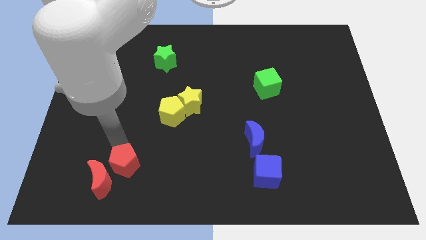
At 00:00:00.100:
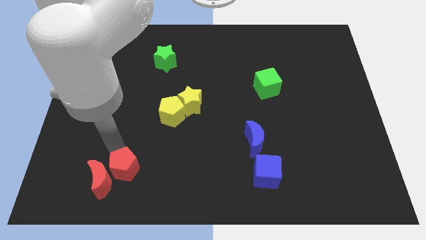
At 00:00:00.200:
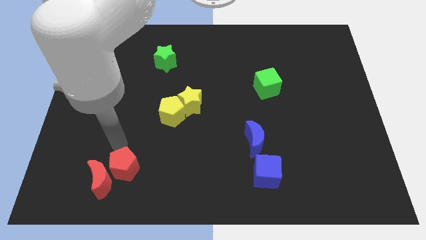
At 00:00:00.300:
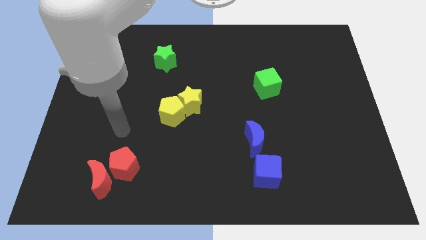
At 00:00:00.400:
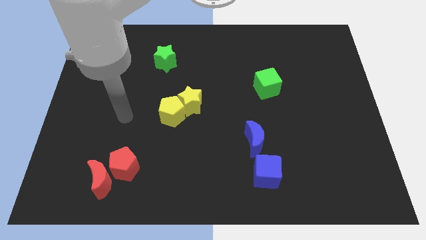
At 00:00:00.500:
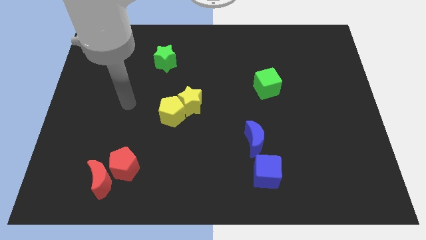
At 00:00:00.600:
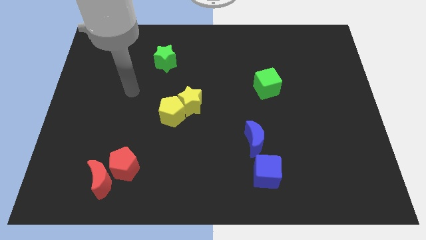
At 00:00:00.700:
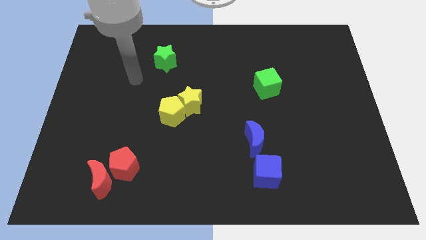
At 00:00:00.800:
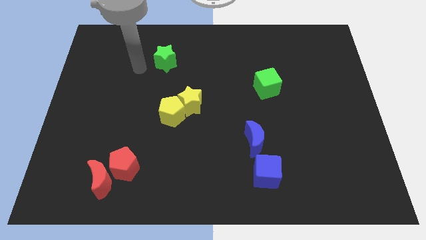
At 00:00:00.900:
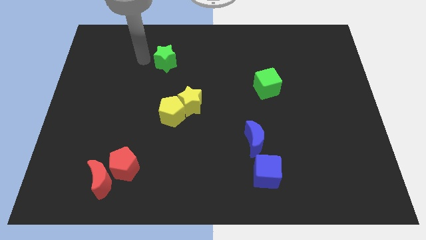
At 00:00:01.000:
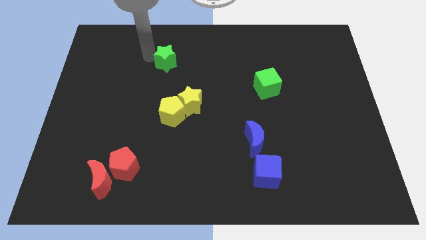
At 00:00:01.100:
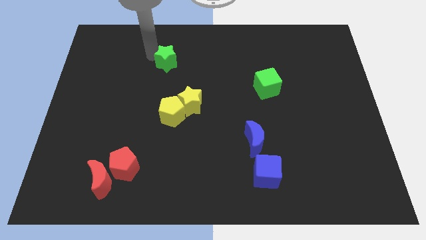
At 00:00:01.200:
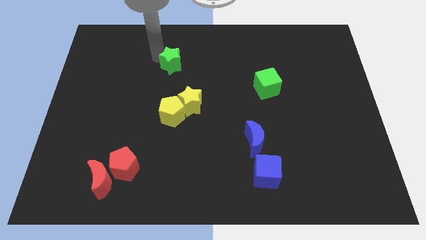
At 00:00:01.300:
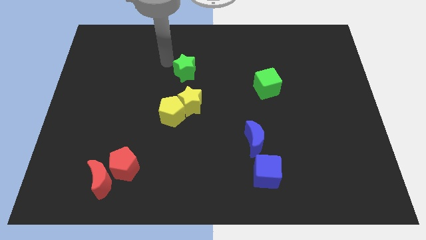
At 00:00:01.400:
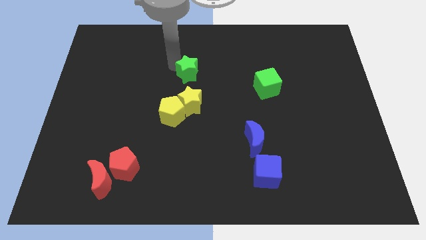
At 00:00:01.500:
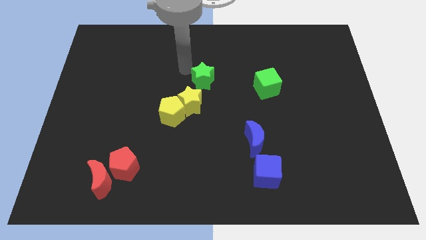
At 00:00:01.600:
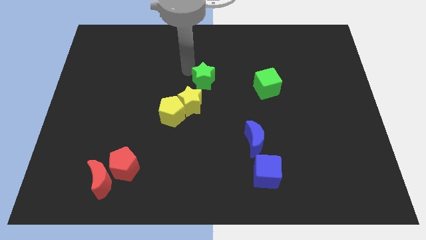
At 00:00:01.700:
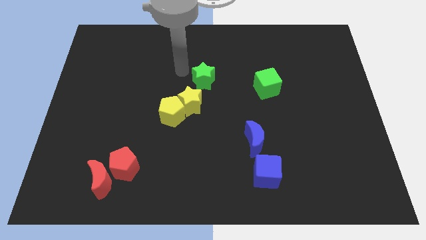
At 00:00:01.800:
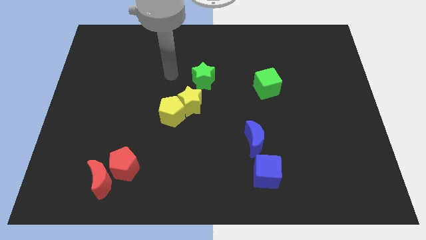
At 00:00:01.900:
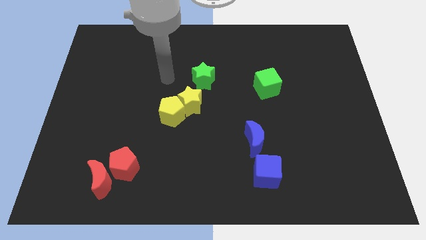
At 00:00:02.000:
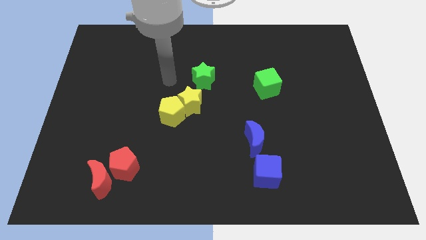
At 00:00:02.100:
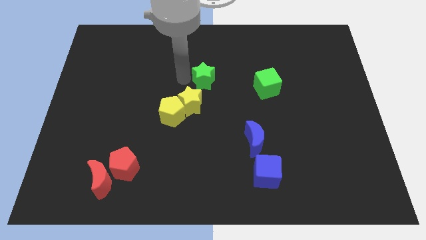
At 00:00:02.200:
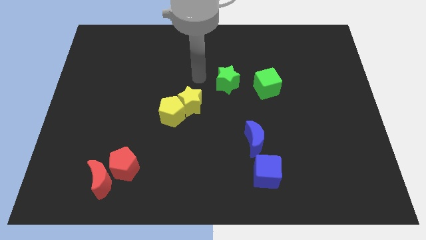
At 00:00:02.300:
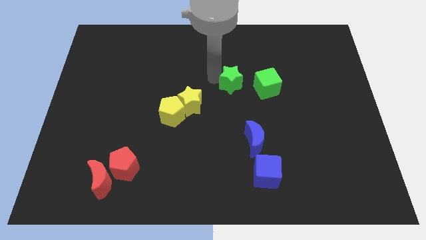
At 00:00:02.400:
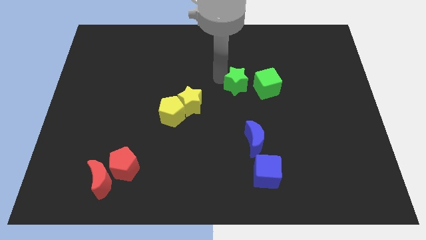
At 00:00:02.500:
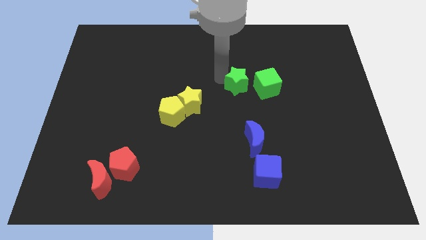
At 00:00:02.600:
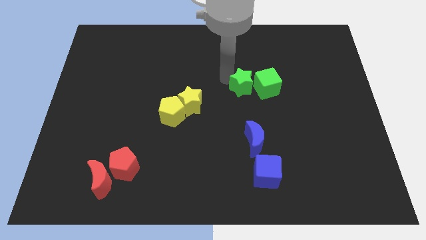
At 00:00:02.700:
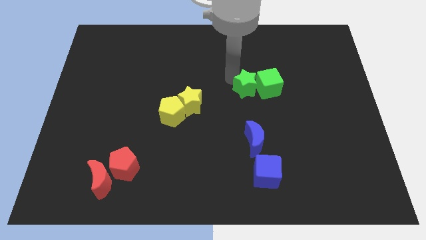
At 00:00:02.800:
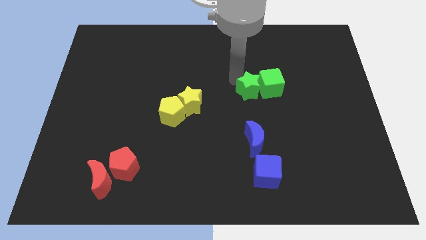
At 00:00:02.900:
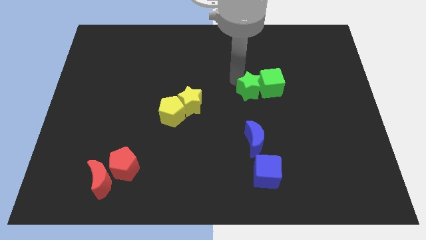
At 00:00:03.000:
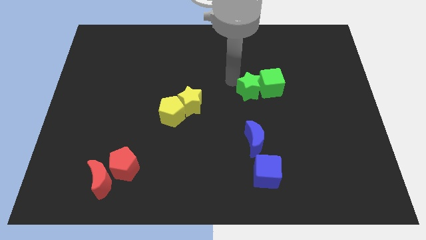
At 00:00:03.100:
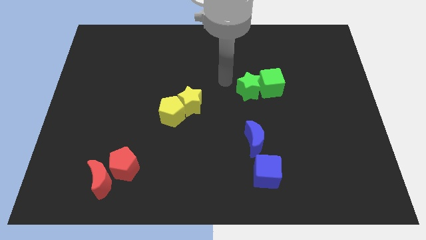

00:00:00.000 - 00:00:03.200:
move the green star into the green cube

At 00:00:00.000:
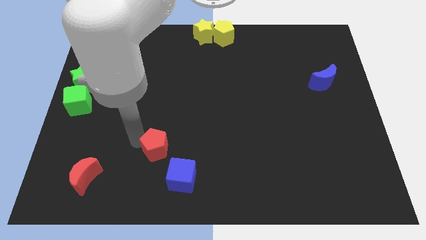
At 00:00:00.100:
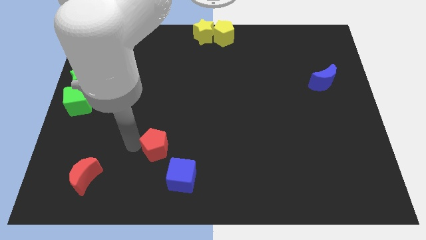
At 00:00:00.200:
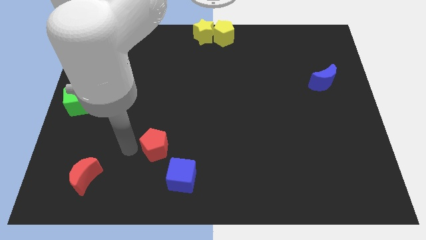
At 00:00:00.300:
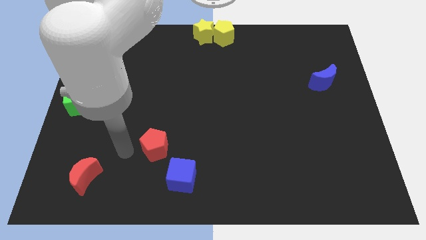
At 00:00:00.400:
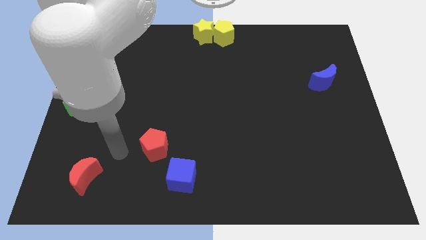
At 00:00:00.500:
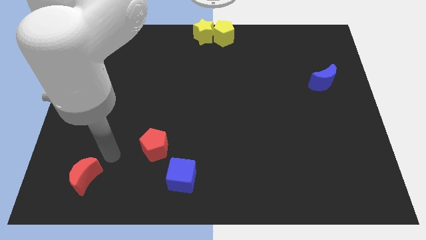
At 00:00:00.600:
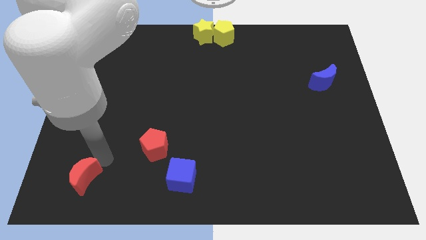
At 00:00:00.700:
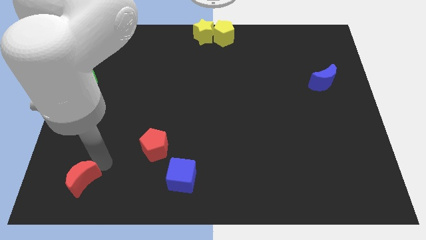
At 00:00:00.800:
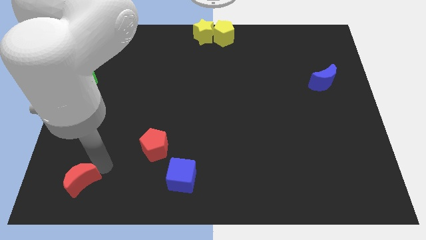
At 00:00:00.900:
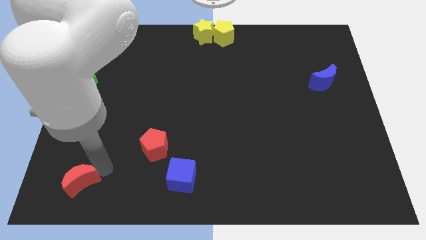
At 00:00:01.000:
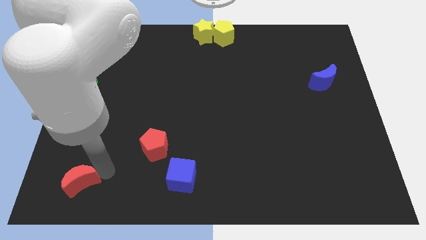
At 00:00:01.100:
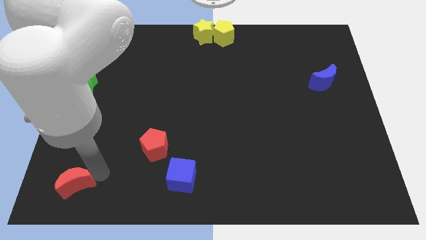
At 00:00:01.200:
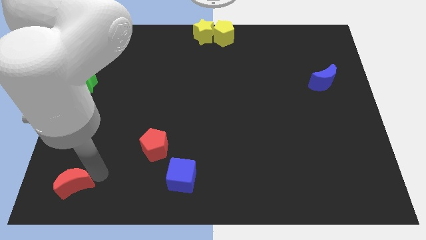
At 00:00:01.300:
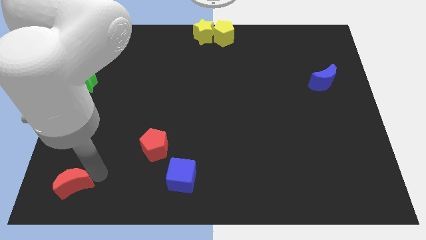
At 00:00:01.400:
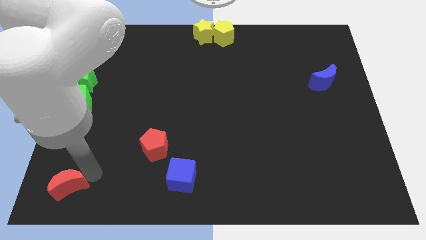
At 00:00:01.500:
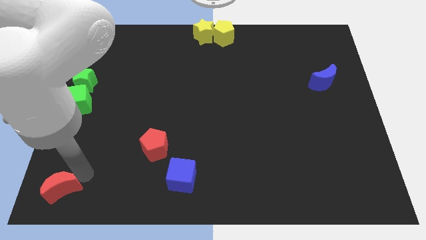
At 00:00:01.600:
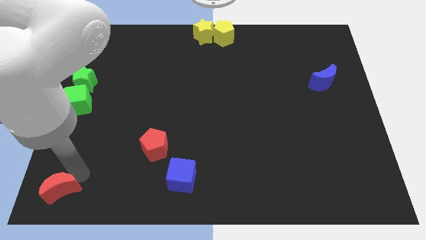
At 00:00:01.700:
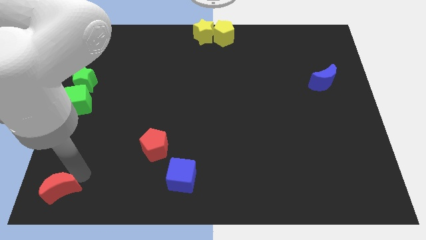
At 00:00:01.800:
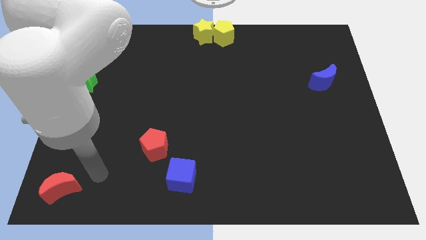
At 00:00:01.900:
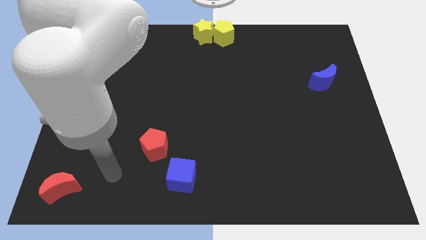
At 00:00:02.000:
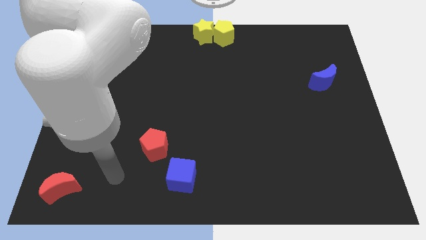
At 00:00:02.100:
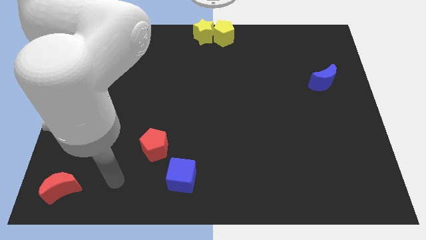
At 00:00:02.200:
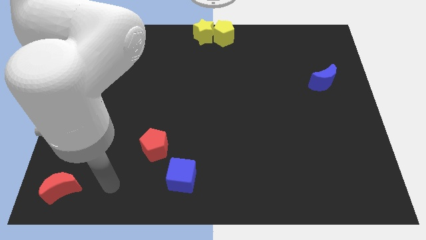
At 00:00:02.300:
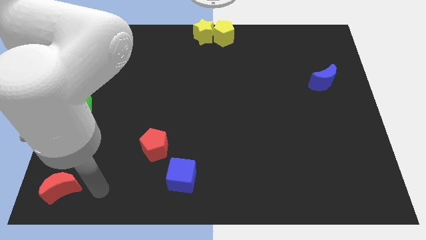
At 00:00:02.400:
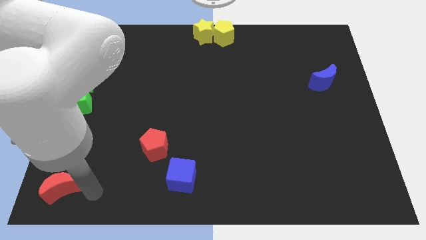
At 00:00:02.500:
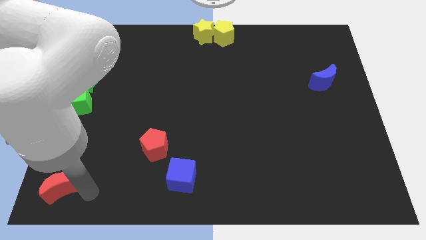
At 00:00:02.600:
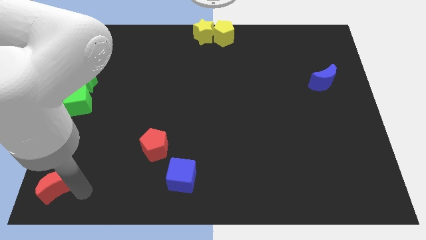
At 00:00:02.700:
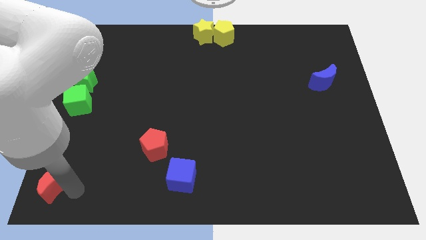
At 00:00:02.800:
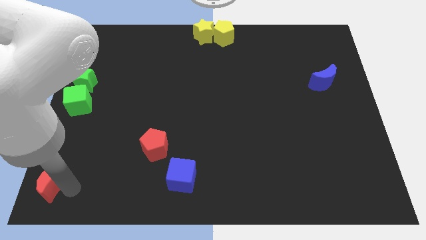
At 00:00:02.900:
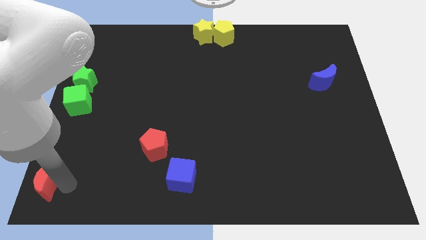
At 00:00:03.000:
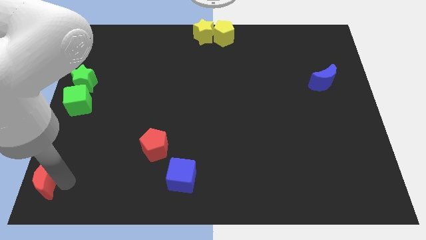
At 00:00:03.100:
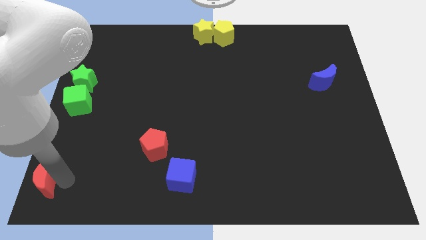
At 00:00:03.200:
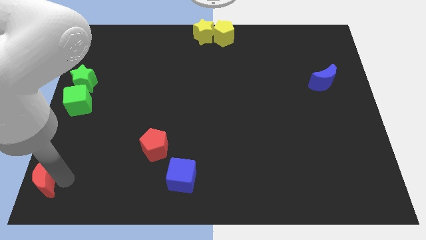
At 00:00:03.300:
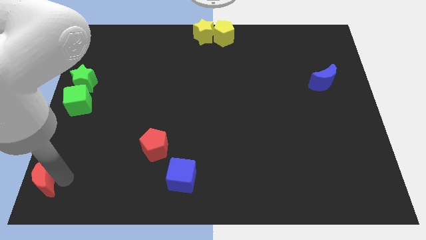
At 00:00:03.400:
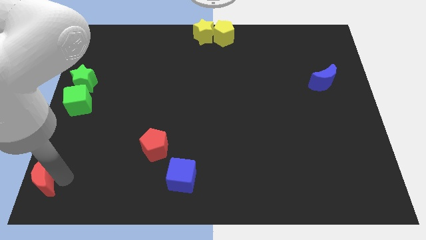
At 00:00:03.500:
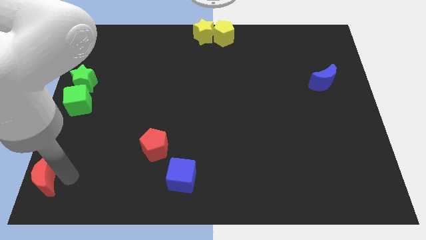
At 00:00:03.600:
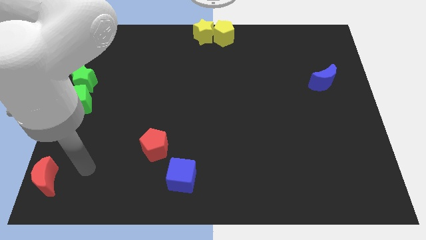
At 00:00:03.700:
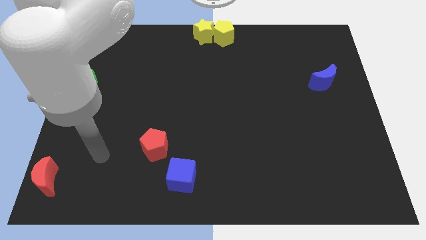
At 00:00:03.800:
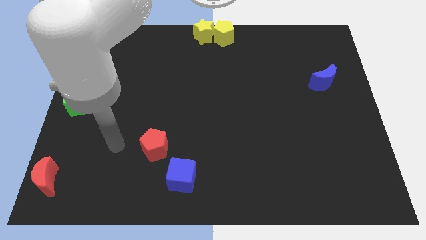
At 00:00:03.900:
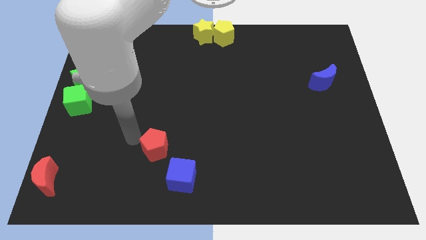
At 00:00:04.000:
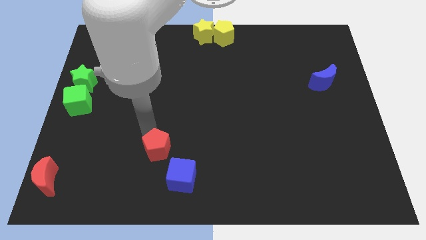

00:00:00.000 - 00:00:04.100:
move the red moon to the bottom left corner of the board

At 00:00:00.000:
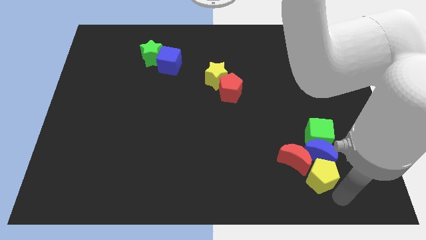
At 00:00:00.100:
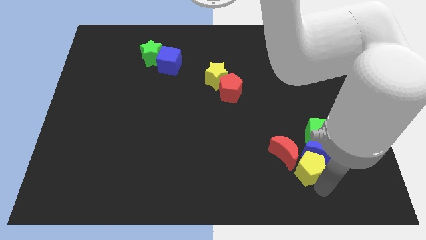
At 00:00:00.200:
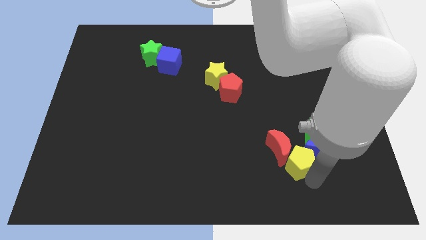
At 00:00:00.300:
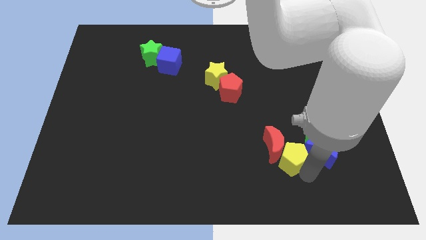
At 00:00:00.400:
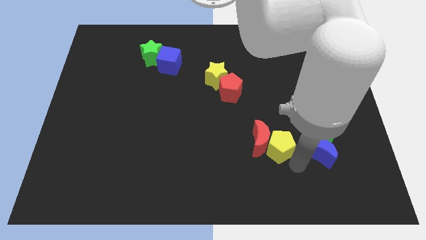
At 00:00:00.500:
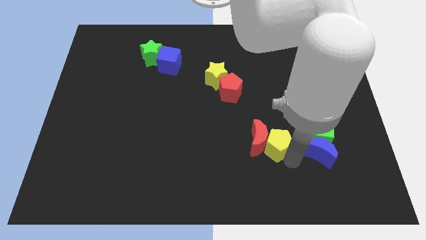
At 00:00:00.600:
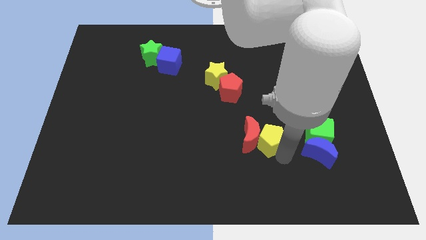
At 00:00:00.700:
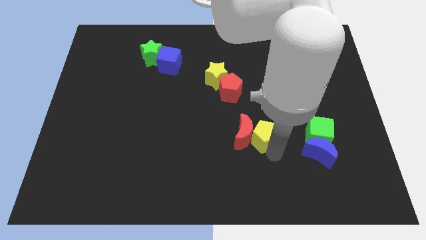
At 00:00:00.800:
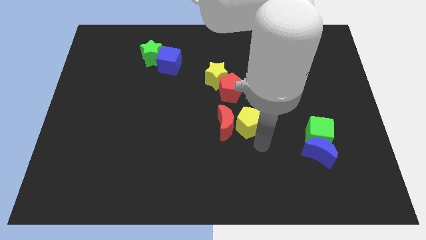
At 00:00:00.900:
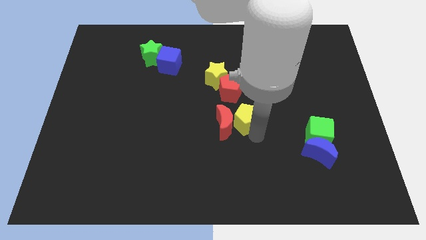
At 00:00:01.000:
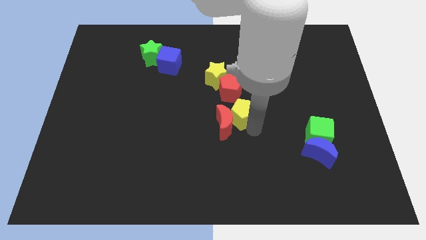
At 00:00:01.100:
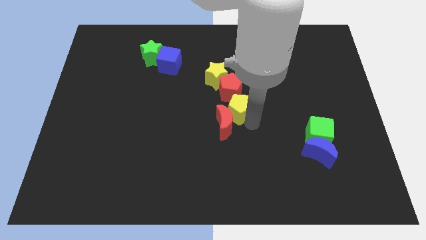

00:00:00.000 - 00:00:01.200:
drag the yellow pentagon along with the red moon towards the center

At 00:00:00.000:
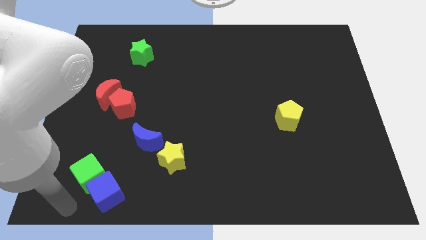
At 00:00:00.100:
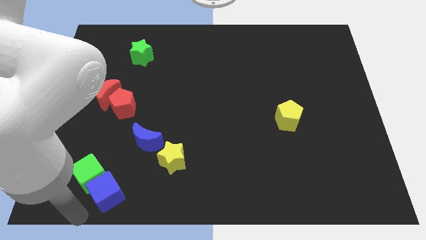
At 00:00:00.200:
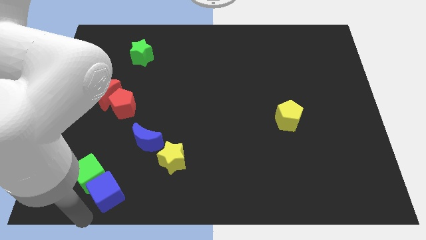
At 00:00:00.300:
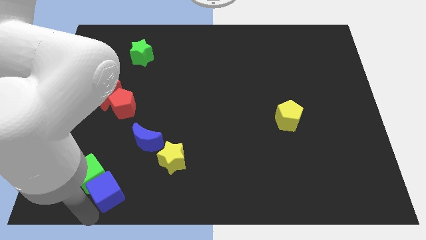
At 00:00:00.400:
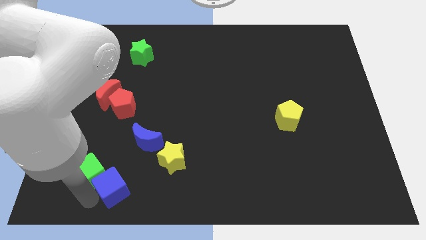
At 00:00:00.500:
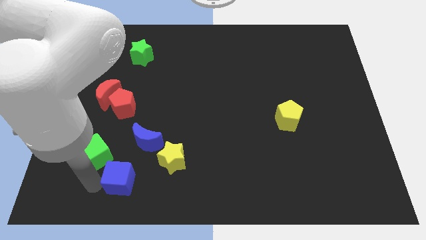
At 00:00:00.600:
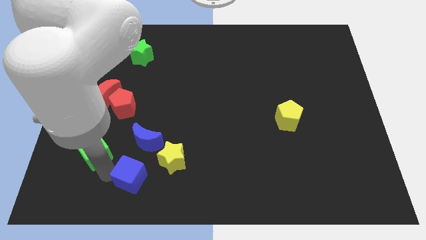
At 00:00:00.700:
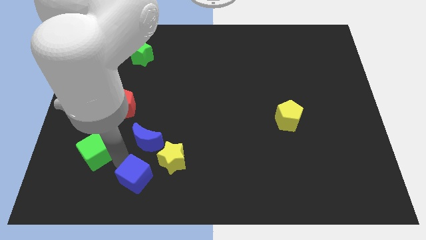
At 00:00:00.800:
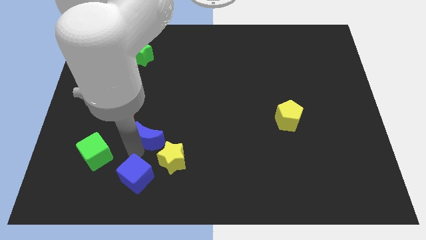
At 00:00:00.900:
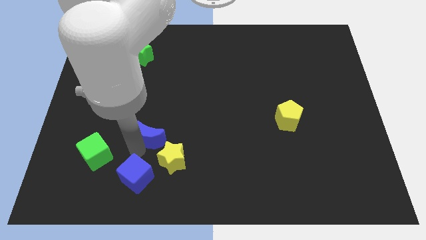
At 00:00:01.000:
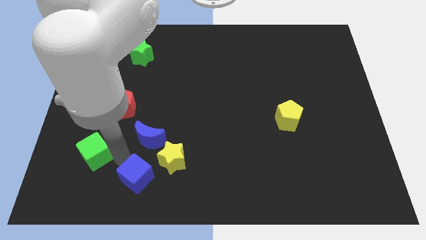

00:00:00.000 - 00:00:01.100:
separate the green cube and the blue cube
